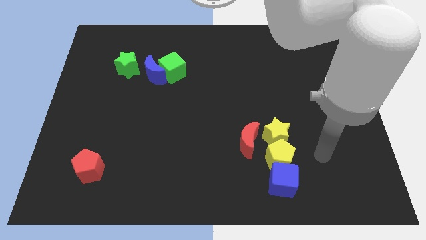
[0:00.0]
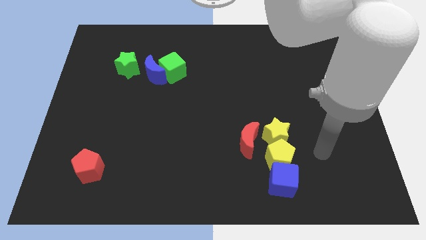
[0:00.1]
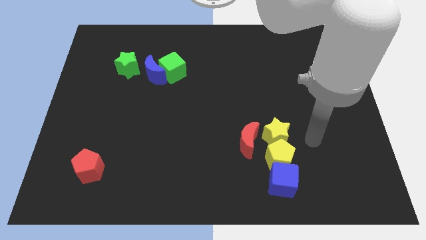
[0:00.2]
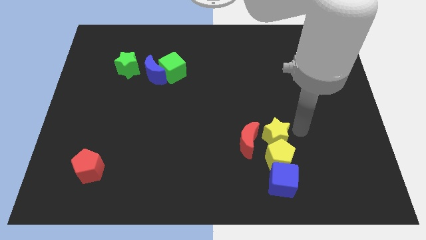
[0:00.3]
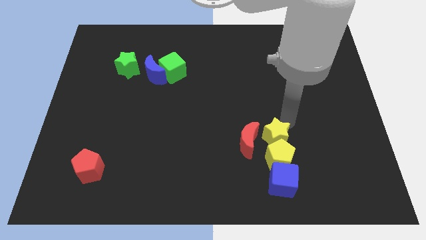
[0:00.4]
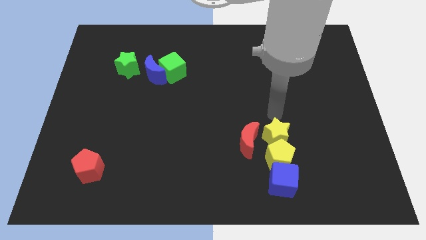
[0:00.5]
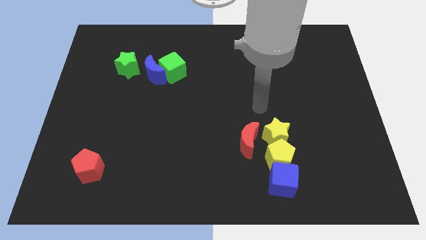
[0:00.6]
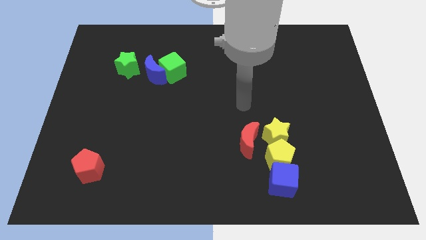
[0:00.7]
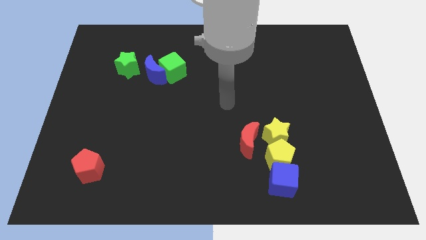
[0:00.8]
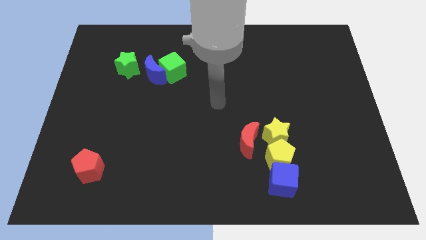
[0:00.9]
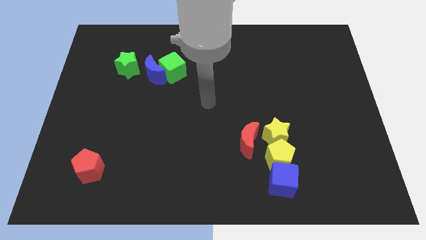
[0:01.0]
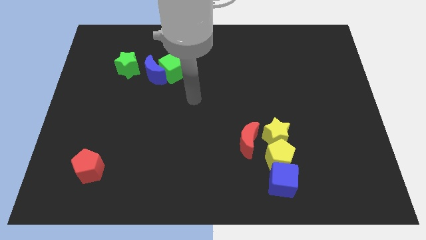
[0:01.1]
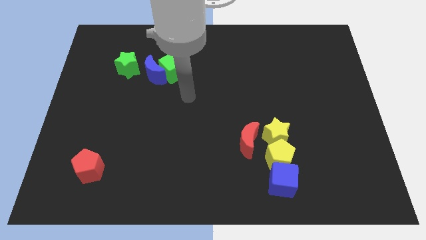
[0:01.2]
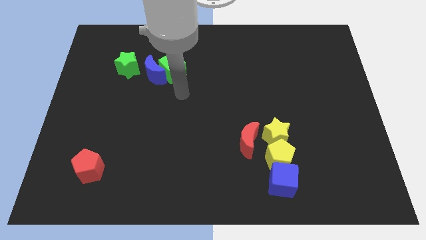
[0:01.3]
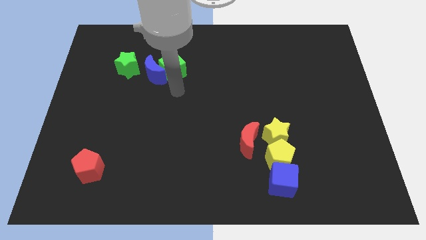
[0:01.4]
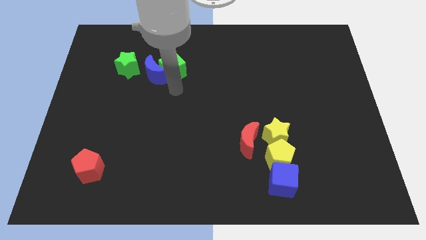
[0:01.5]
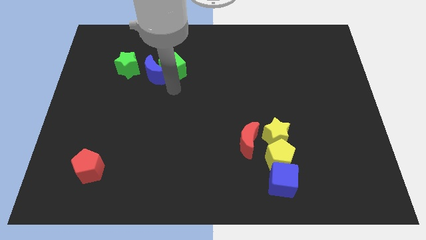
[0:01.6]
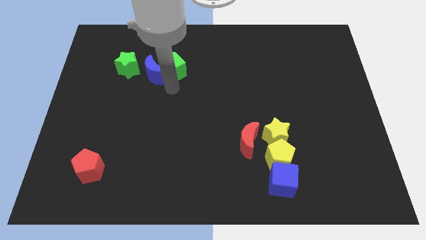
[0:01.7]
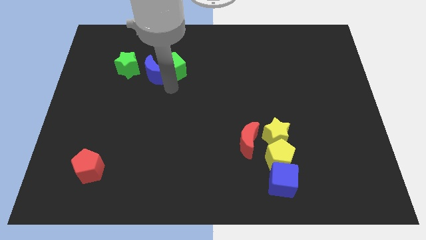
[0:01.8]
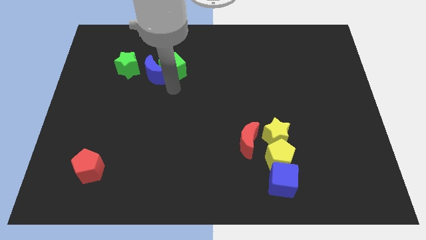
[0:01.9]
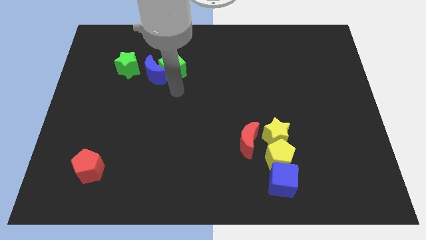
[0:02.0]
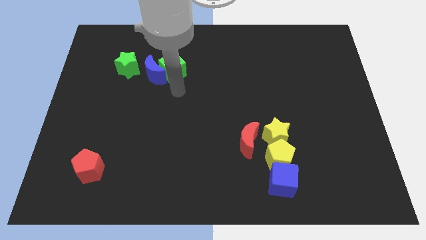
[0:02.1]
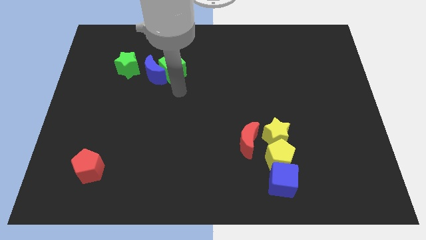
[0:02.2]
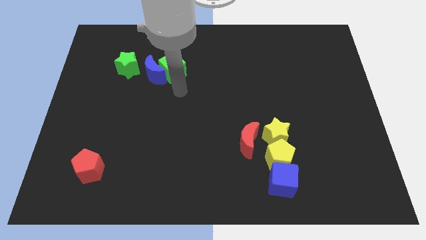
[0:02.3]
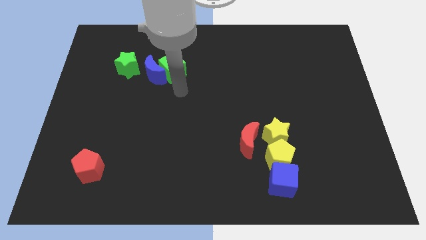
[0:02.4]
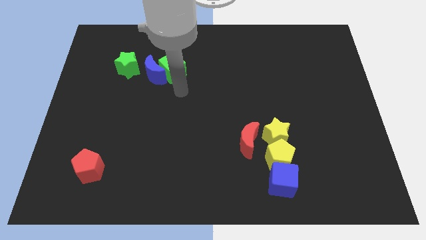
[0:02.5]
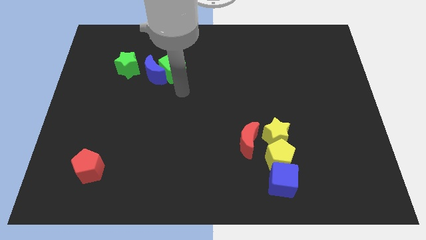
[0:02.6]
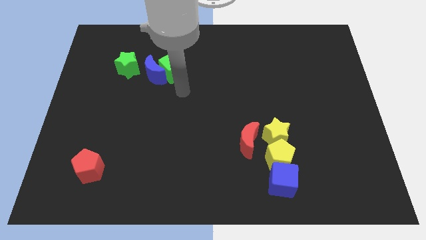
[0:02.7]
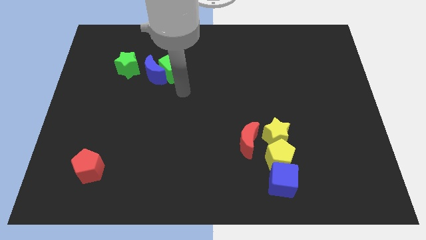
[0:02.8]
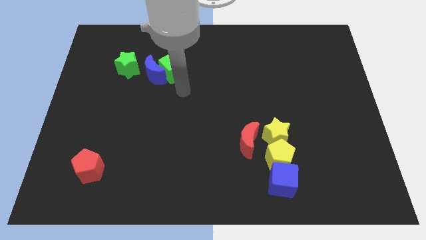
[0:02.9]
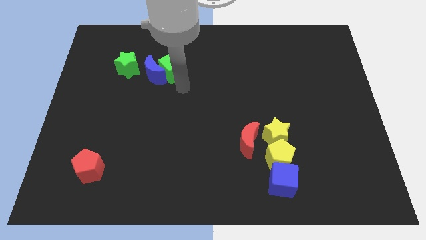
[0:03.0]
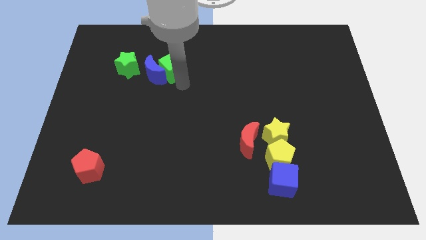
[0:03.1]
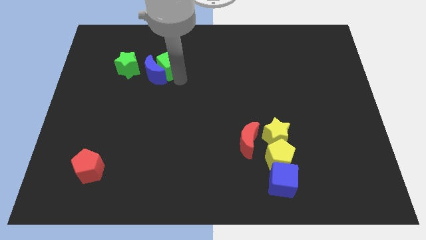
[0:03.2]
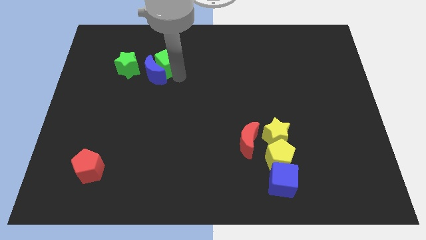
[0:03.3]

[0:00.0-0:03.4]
slightly push the green cube to the top side

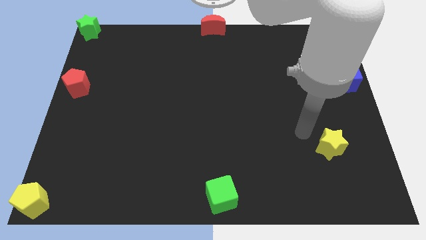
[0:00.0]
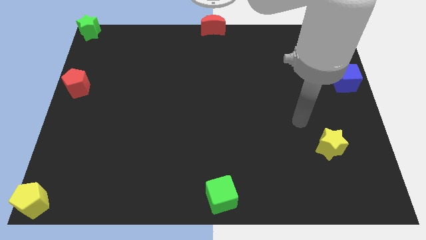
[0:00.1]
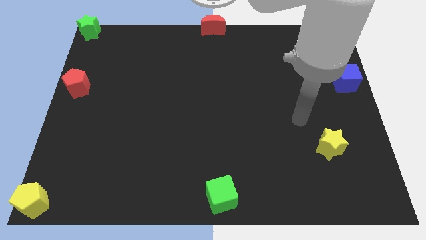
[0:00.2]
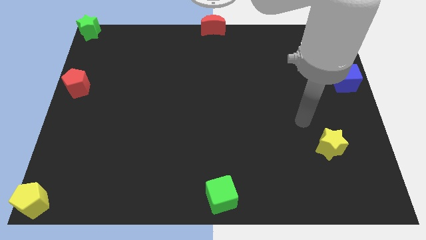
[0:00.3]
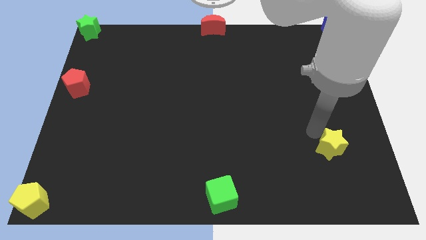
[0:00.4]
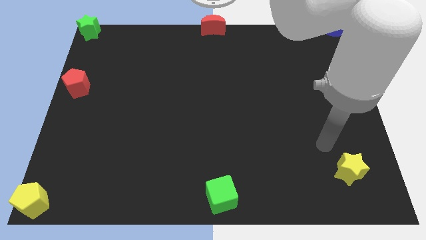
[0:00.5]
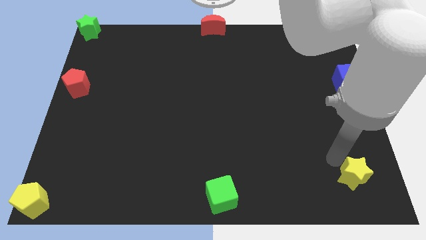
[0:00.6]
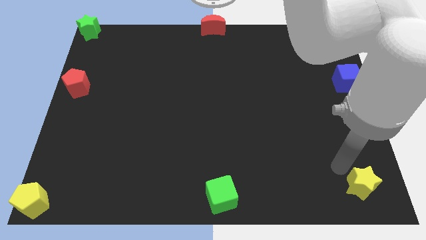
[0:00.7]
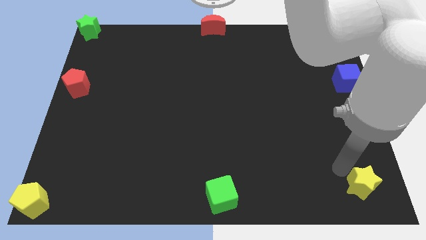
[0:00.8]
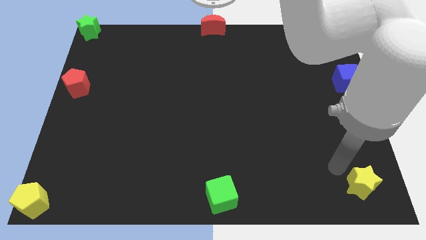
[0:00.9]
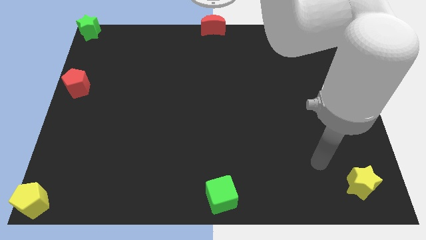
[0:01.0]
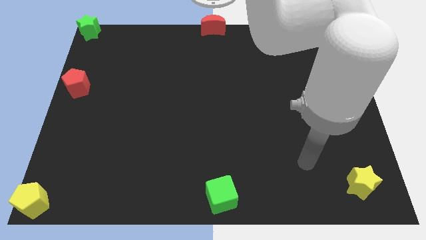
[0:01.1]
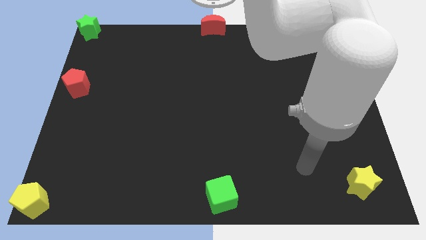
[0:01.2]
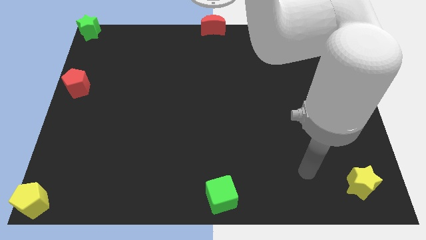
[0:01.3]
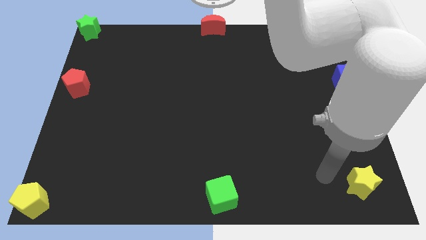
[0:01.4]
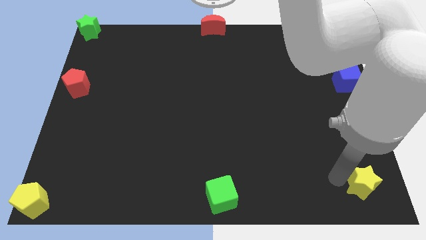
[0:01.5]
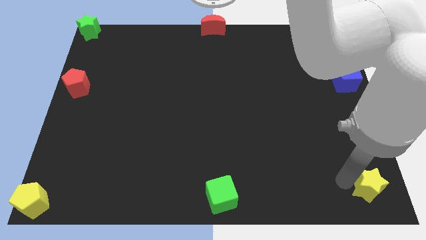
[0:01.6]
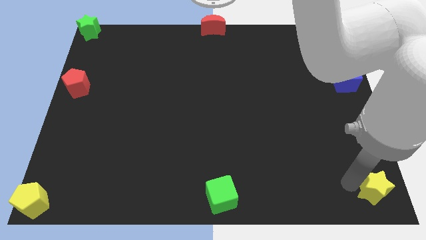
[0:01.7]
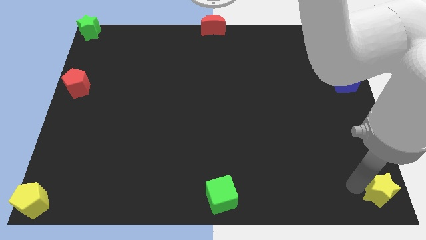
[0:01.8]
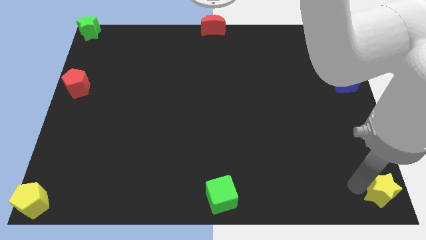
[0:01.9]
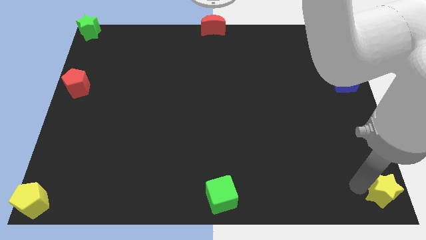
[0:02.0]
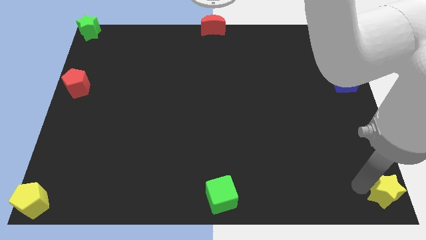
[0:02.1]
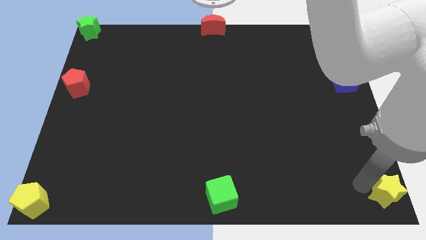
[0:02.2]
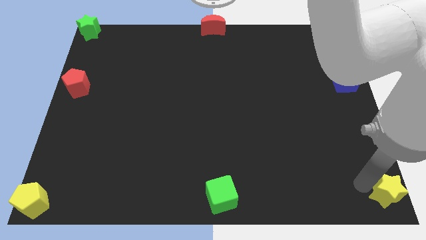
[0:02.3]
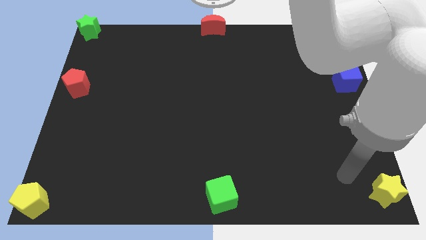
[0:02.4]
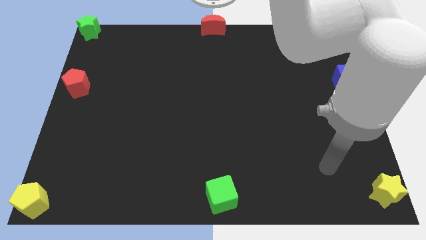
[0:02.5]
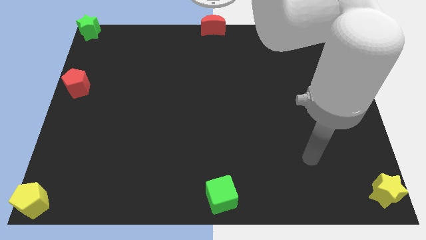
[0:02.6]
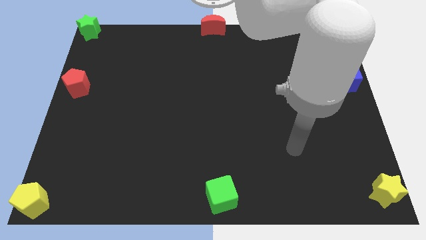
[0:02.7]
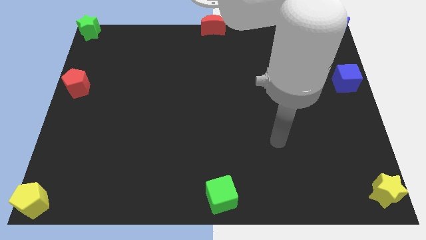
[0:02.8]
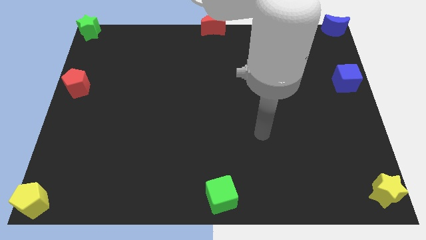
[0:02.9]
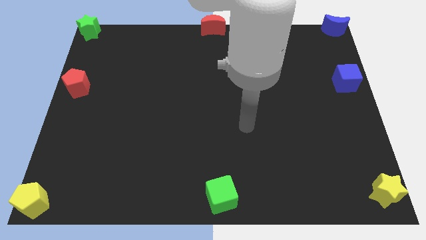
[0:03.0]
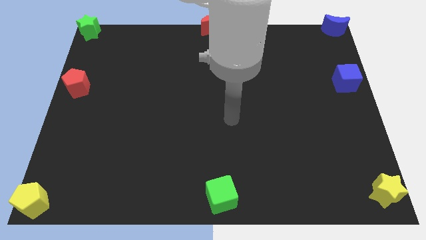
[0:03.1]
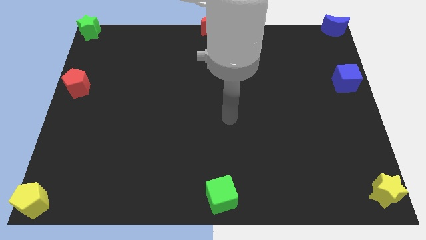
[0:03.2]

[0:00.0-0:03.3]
move the yellow star to the bottom right corner of the board

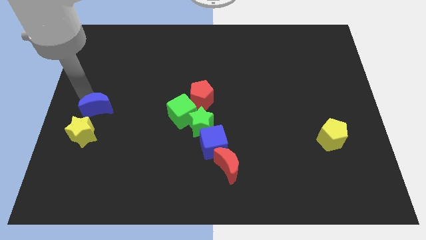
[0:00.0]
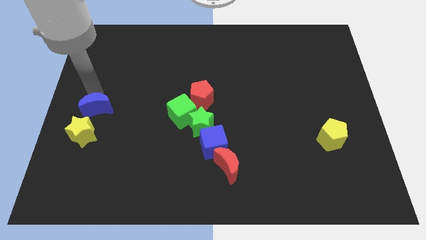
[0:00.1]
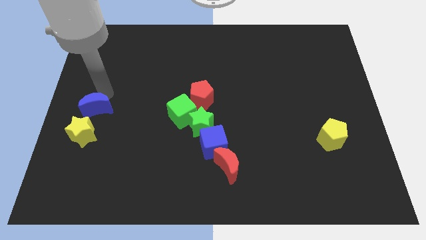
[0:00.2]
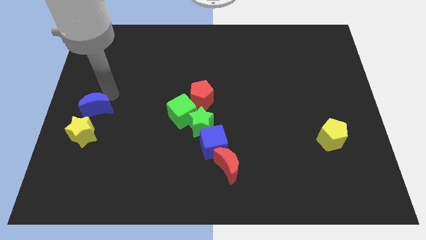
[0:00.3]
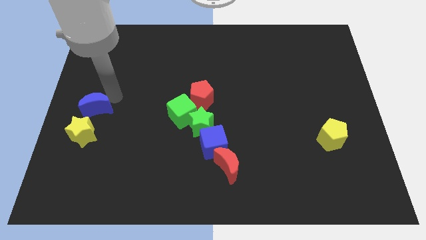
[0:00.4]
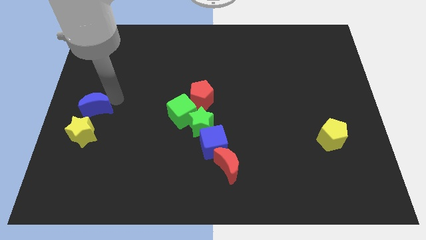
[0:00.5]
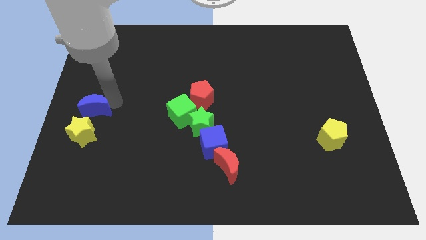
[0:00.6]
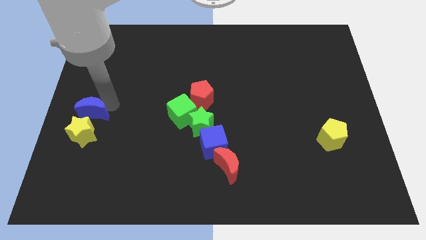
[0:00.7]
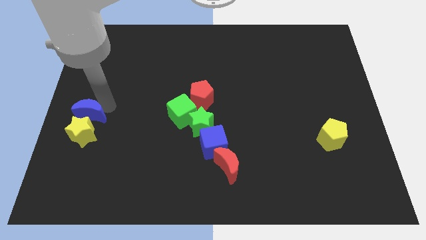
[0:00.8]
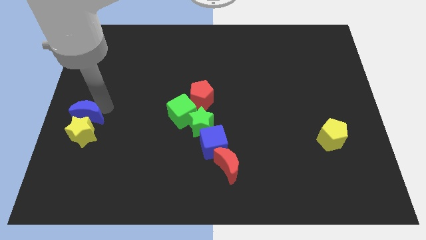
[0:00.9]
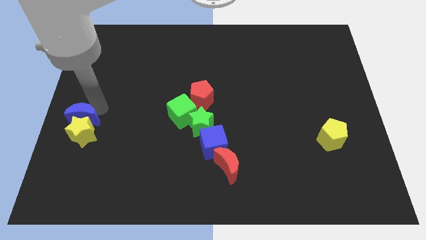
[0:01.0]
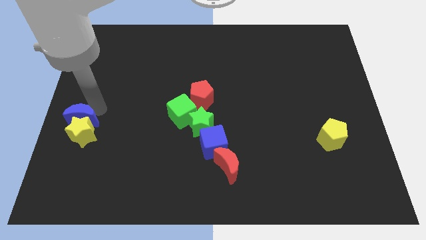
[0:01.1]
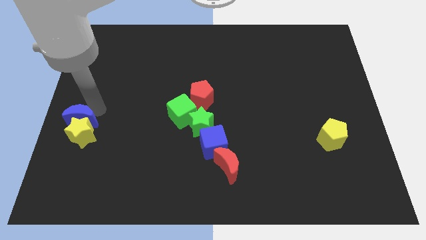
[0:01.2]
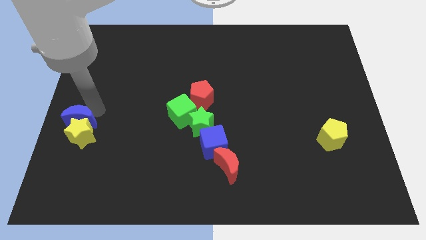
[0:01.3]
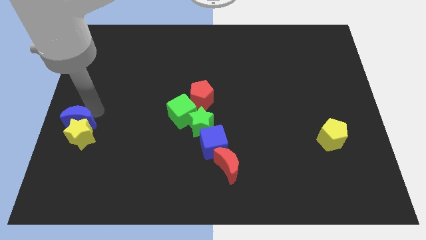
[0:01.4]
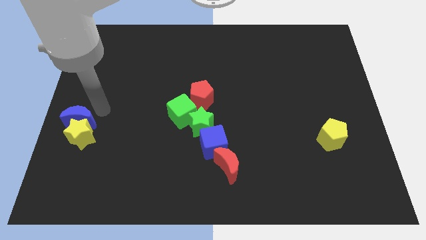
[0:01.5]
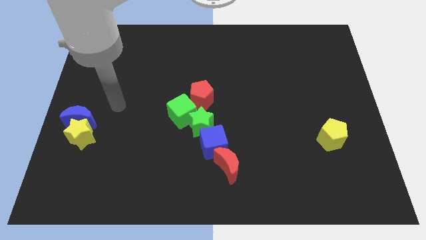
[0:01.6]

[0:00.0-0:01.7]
push the blue moon into the yellow star

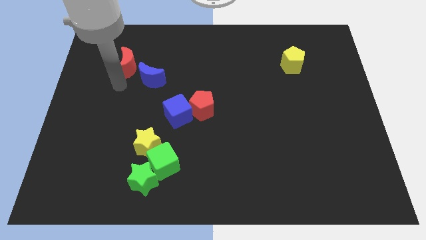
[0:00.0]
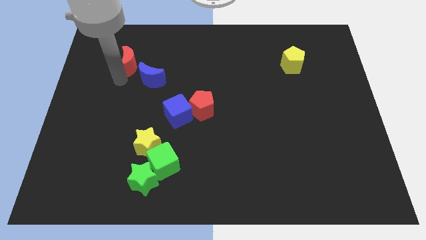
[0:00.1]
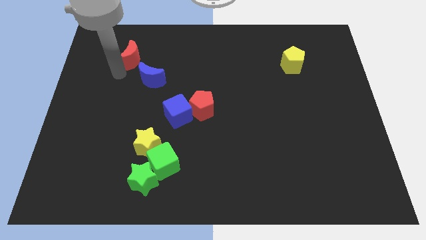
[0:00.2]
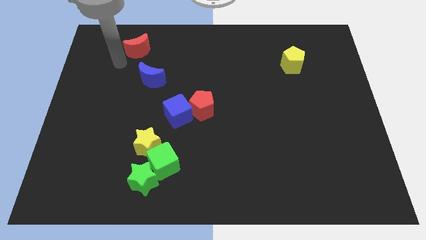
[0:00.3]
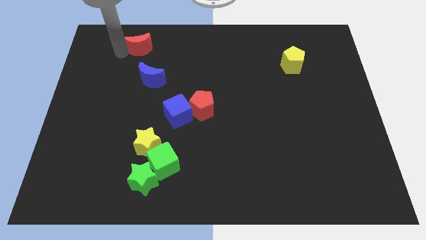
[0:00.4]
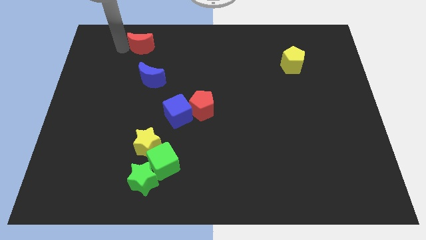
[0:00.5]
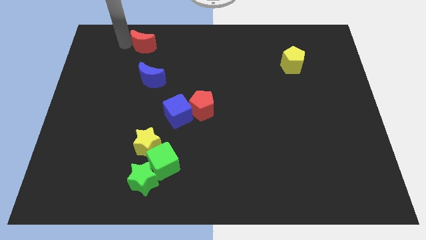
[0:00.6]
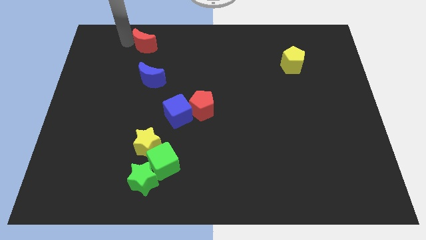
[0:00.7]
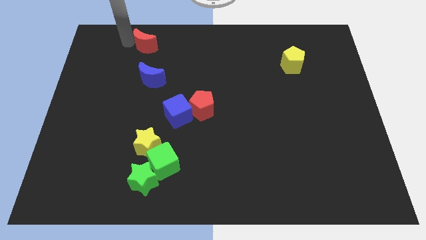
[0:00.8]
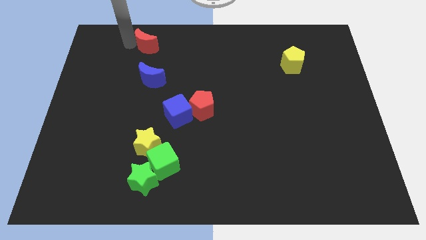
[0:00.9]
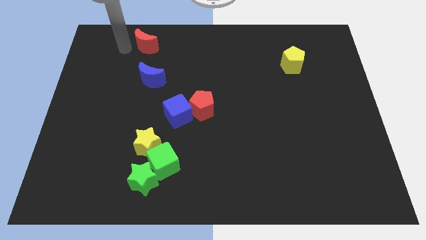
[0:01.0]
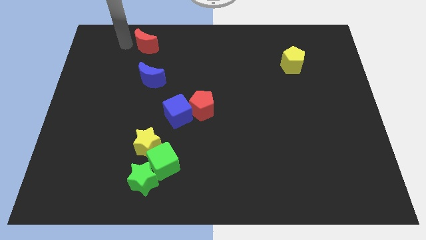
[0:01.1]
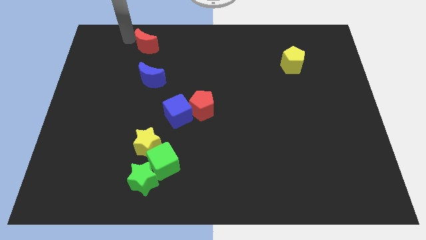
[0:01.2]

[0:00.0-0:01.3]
move the red crescent vertically to the top of the blue crescent
